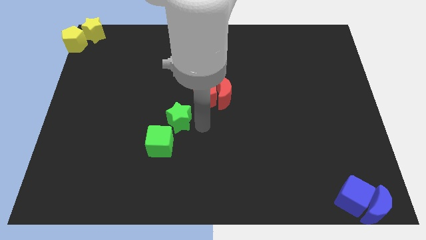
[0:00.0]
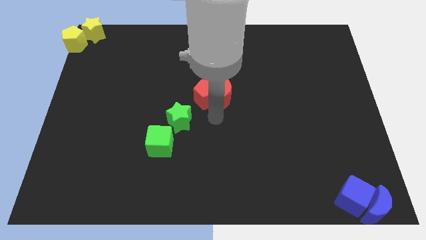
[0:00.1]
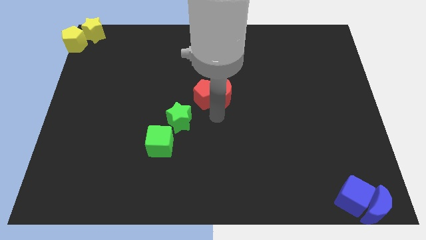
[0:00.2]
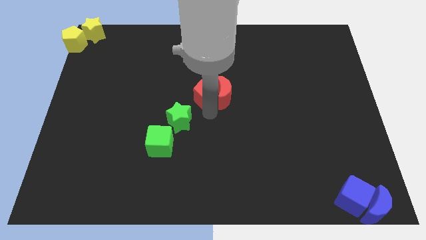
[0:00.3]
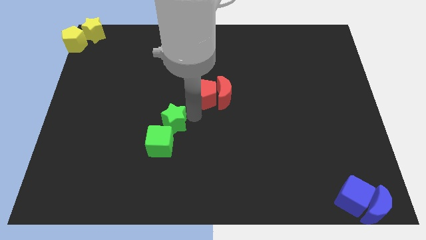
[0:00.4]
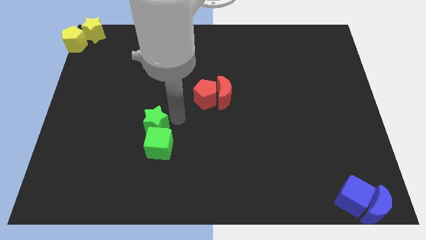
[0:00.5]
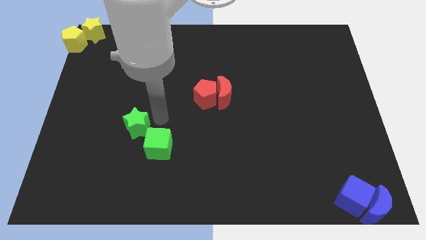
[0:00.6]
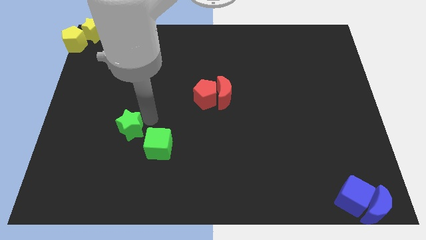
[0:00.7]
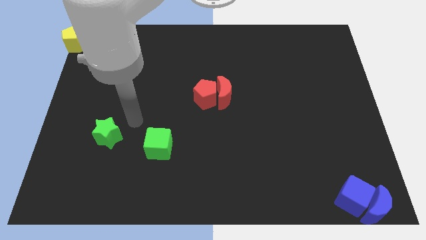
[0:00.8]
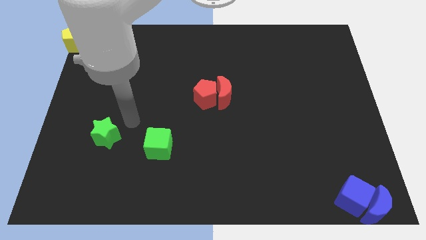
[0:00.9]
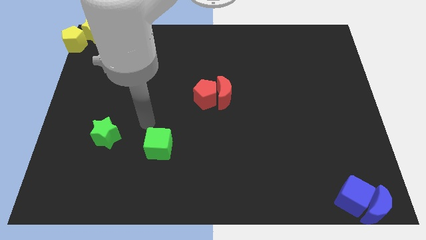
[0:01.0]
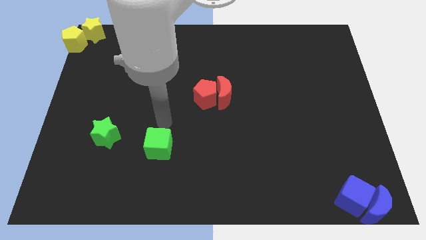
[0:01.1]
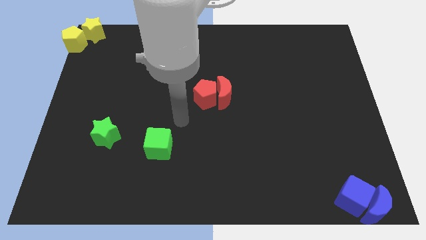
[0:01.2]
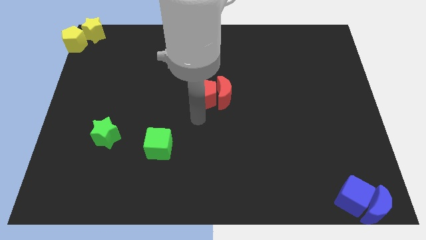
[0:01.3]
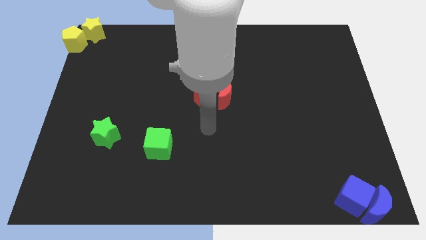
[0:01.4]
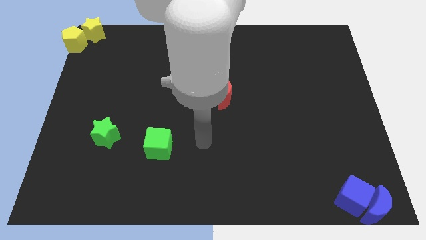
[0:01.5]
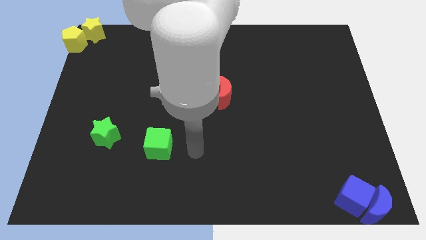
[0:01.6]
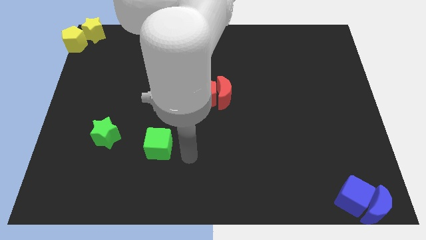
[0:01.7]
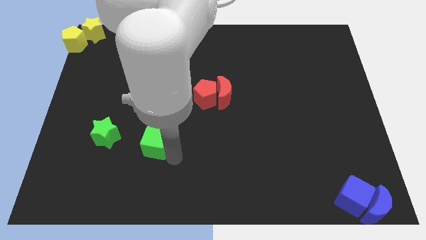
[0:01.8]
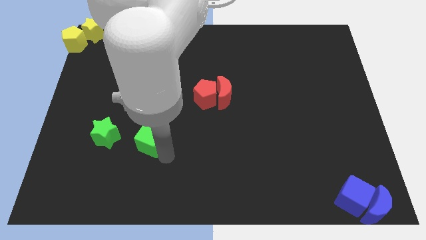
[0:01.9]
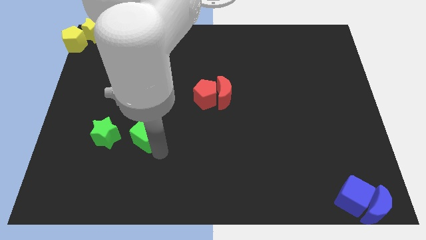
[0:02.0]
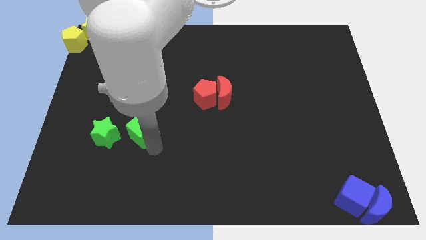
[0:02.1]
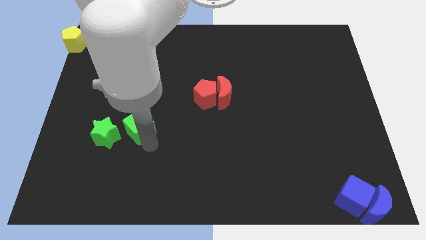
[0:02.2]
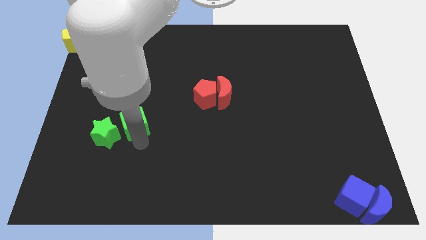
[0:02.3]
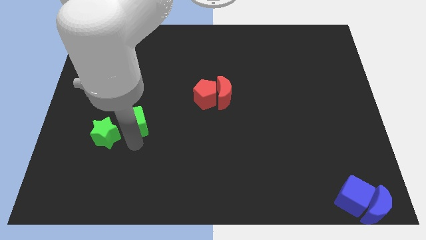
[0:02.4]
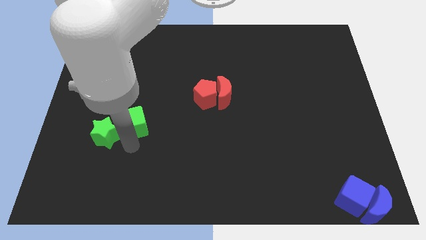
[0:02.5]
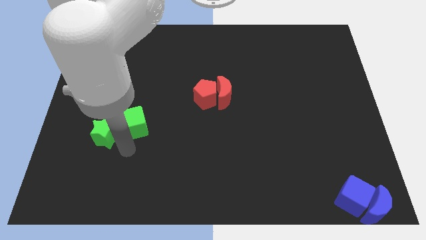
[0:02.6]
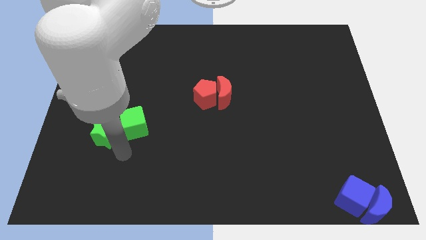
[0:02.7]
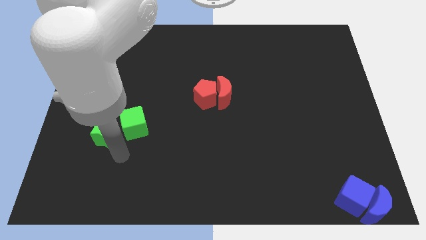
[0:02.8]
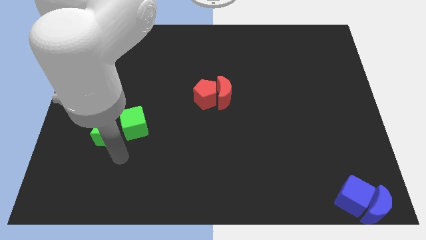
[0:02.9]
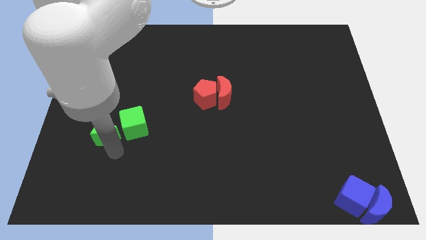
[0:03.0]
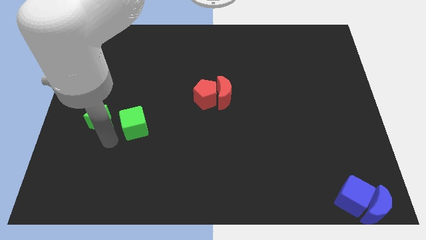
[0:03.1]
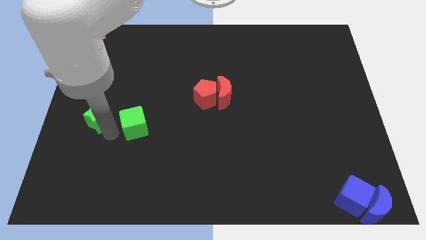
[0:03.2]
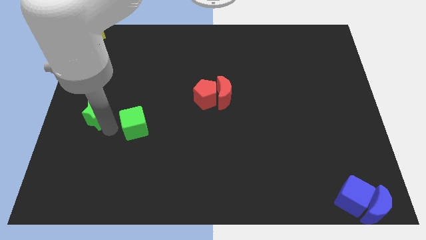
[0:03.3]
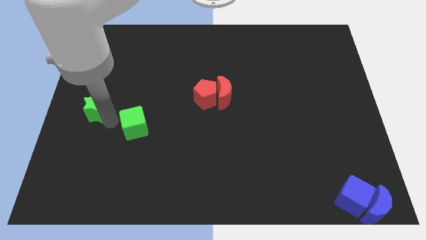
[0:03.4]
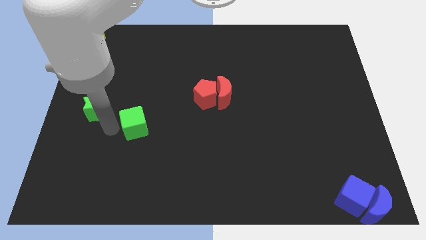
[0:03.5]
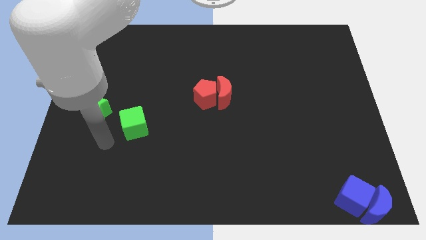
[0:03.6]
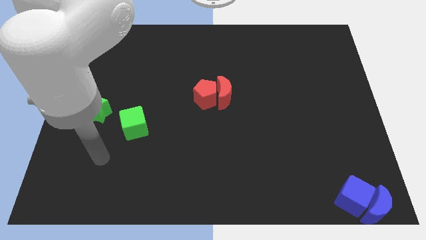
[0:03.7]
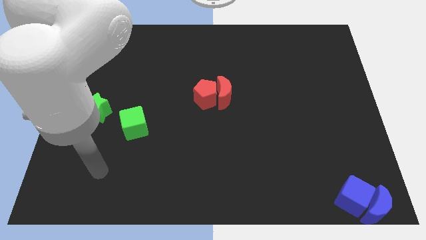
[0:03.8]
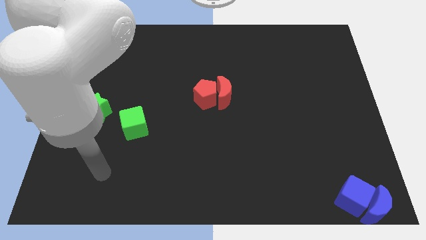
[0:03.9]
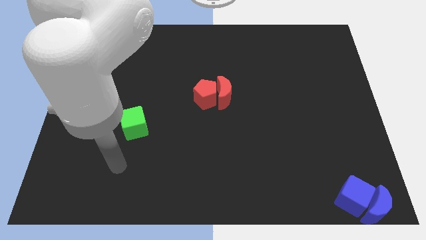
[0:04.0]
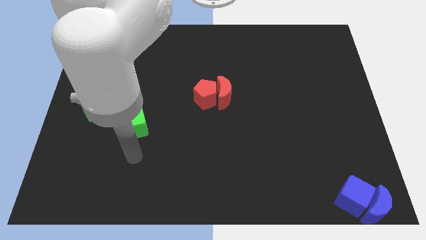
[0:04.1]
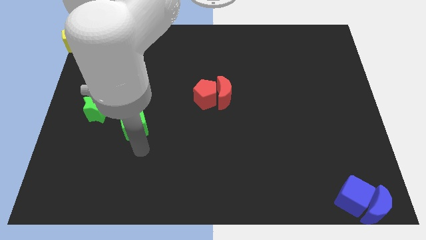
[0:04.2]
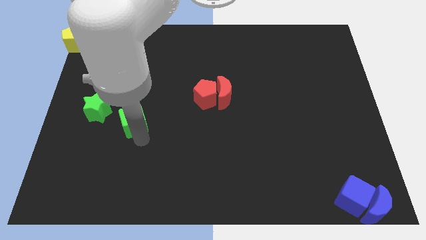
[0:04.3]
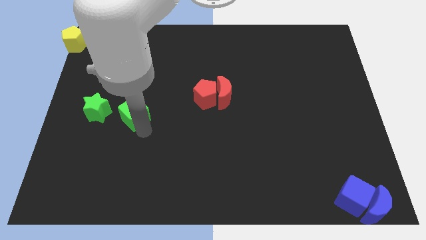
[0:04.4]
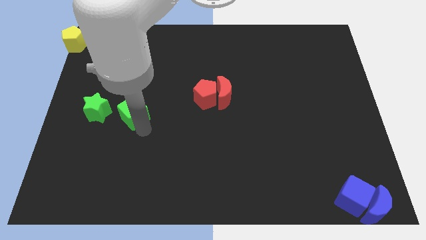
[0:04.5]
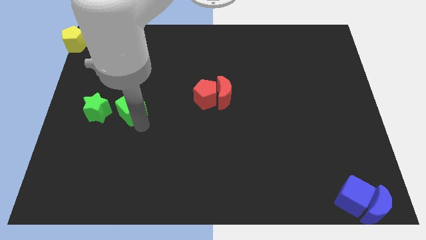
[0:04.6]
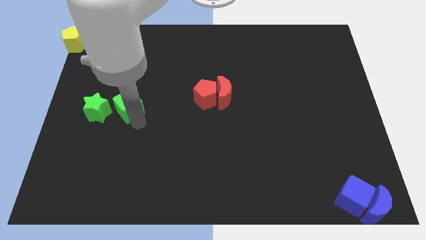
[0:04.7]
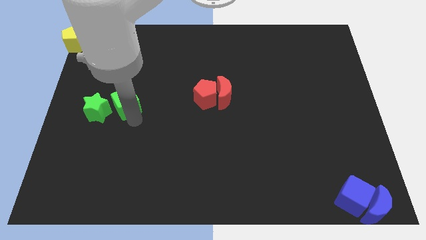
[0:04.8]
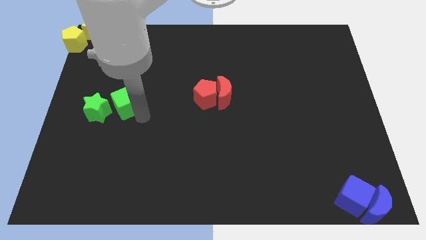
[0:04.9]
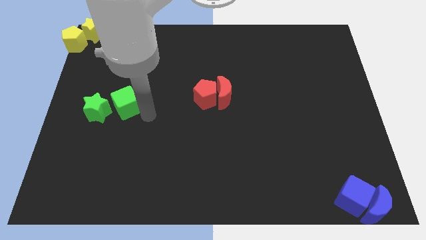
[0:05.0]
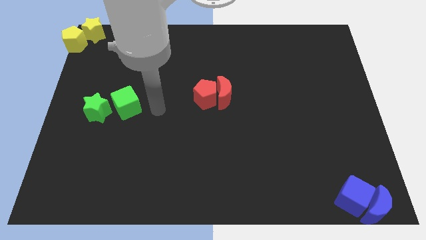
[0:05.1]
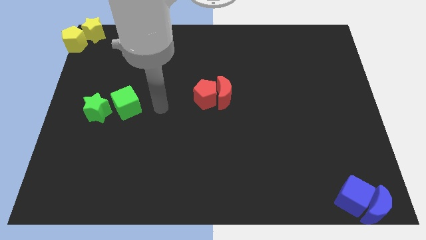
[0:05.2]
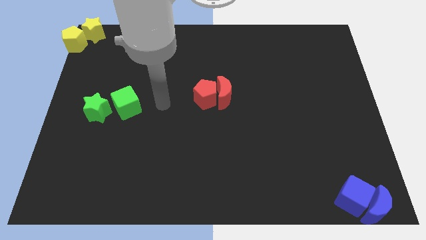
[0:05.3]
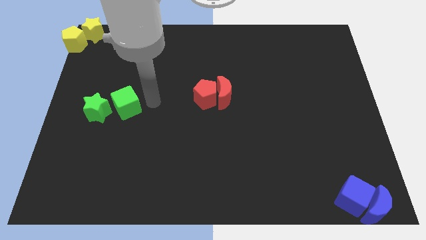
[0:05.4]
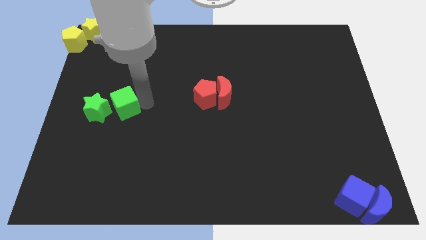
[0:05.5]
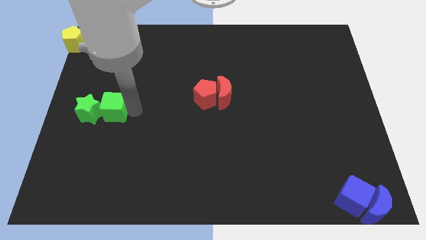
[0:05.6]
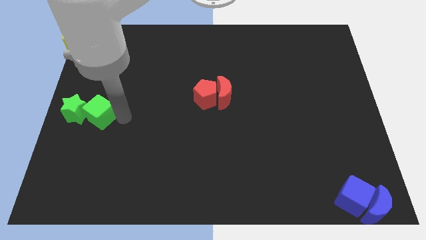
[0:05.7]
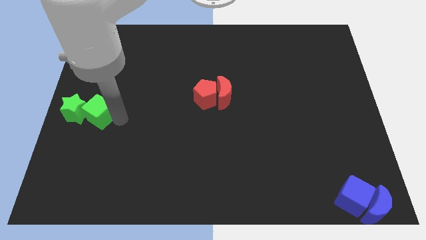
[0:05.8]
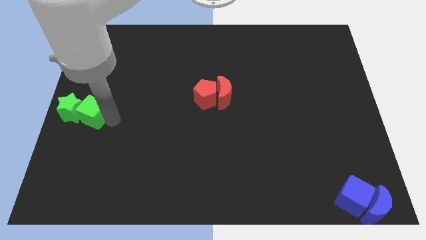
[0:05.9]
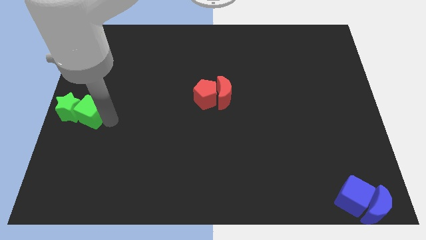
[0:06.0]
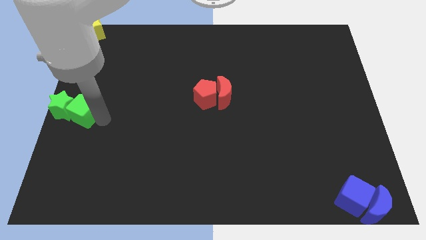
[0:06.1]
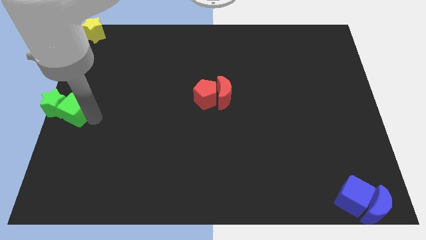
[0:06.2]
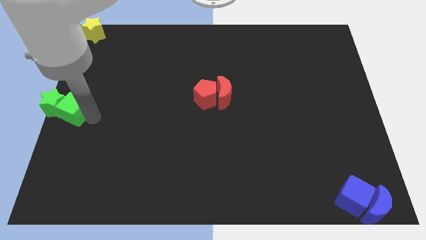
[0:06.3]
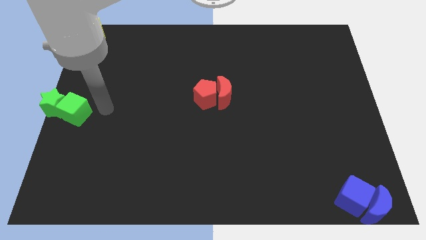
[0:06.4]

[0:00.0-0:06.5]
move the green cube and green star to the center left of the board

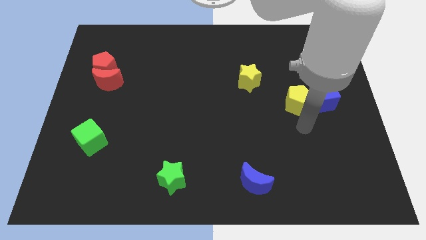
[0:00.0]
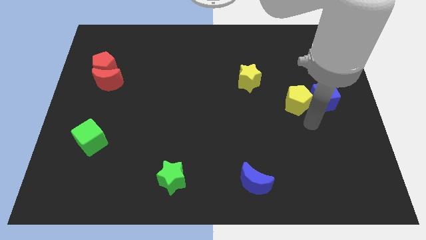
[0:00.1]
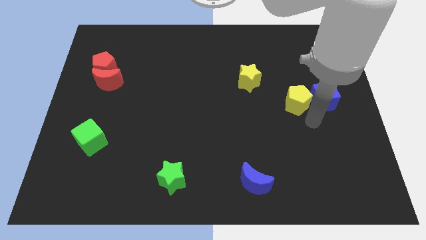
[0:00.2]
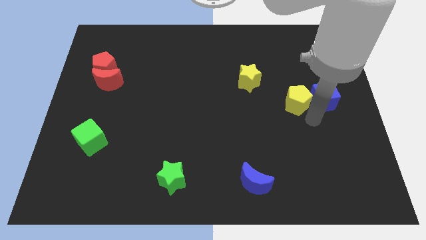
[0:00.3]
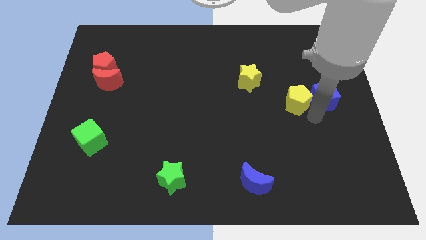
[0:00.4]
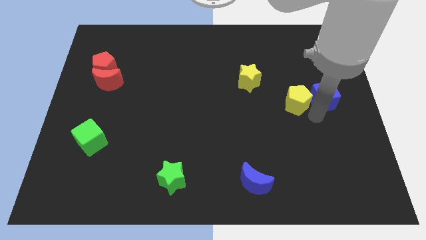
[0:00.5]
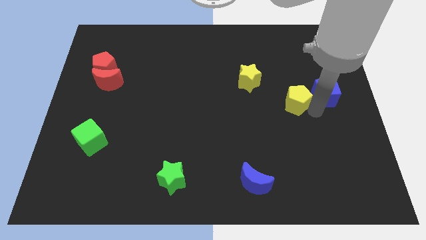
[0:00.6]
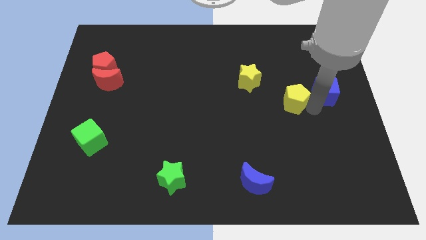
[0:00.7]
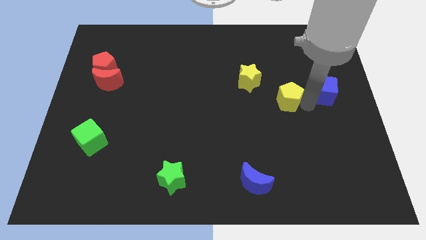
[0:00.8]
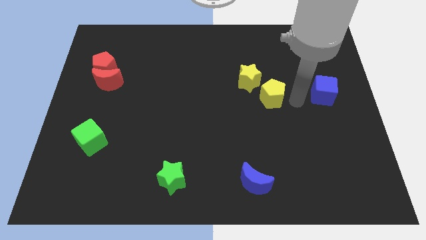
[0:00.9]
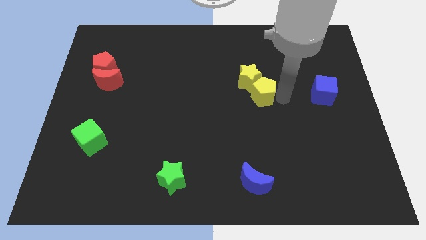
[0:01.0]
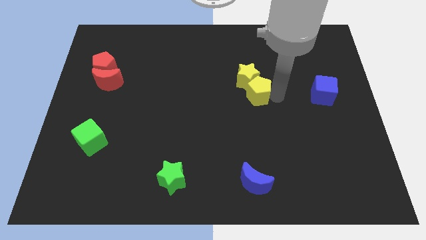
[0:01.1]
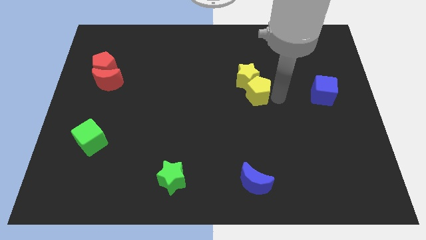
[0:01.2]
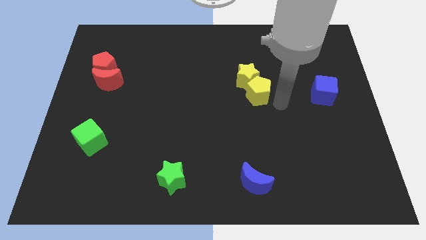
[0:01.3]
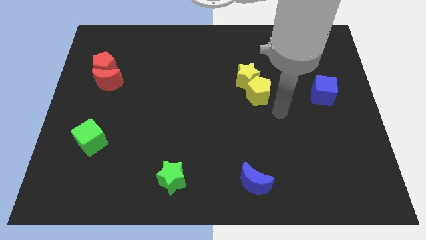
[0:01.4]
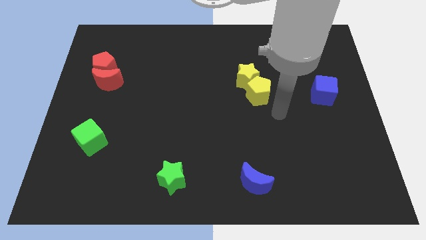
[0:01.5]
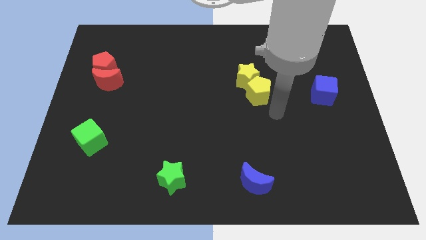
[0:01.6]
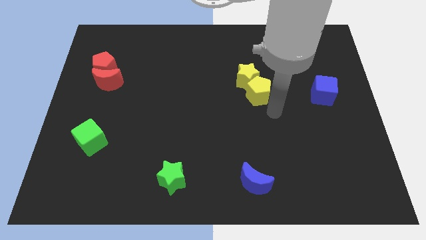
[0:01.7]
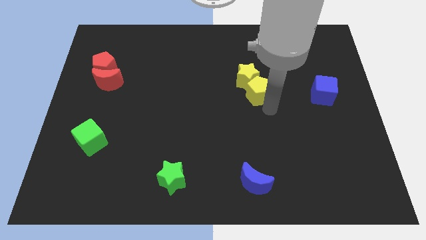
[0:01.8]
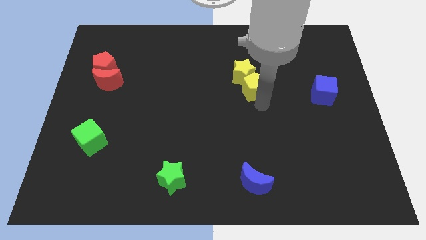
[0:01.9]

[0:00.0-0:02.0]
place the yellow pentagon into the yellow star

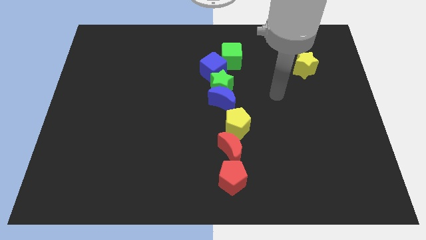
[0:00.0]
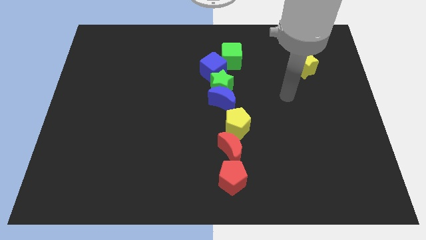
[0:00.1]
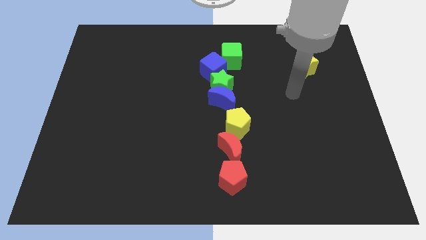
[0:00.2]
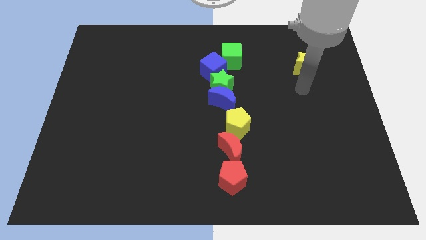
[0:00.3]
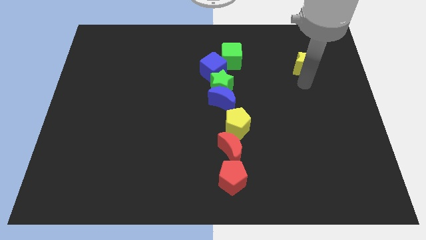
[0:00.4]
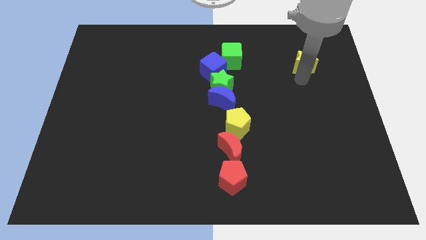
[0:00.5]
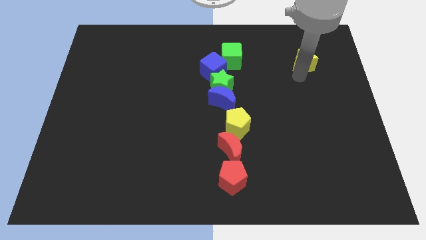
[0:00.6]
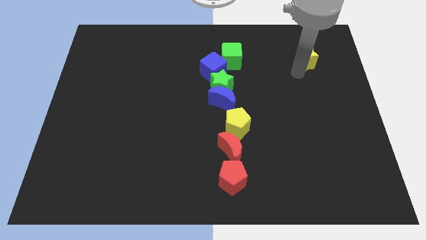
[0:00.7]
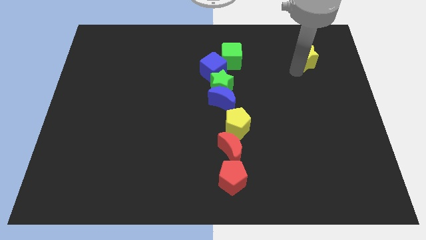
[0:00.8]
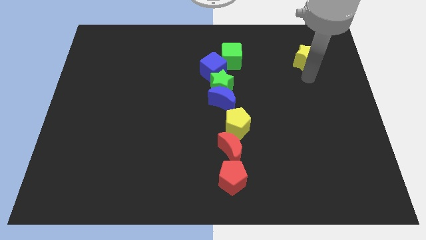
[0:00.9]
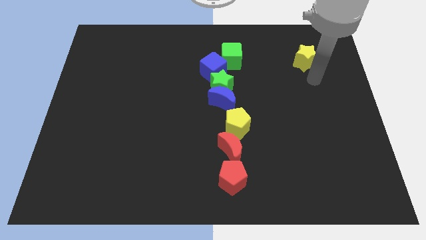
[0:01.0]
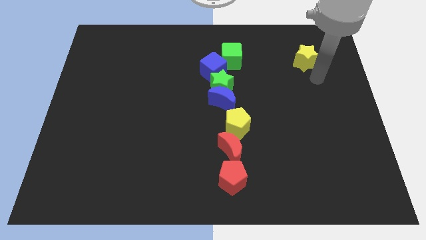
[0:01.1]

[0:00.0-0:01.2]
slide the yellow star to the right of the green cube
